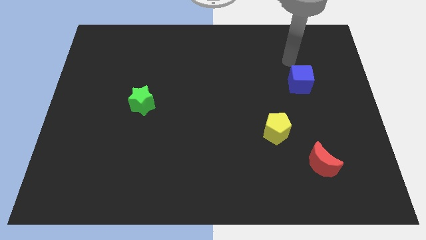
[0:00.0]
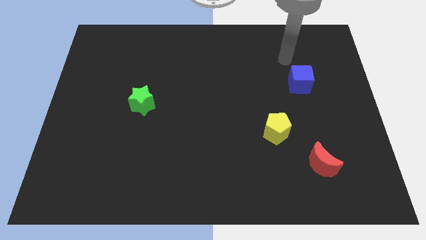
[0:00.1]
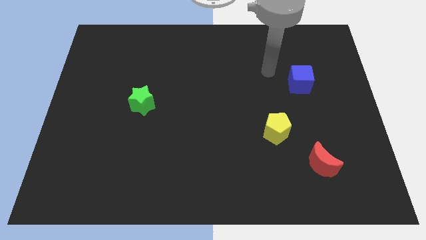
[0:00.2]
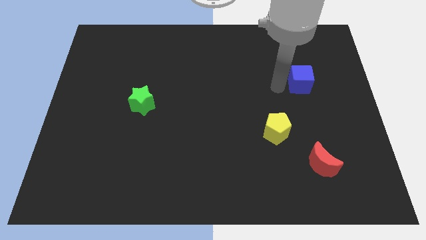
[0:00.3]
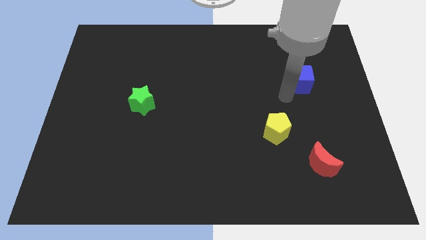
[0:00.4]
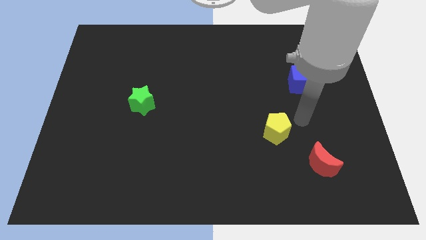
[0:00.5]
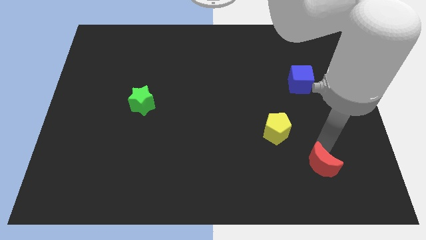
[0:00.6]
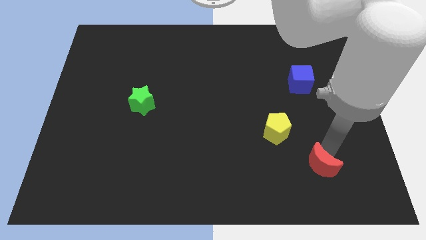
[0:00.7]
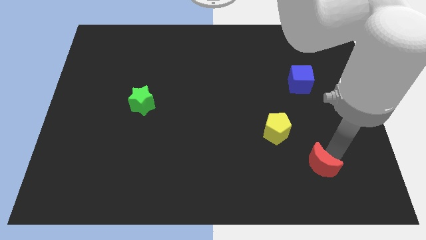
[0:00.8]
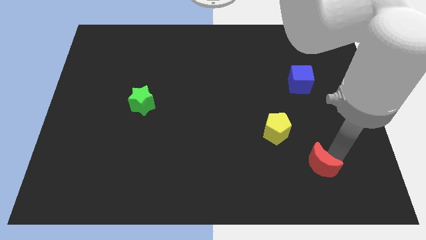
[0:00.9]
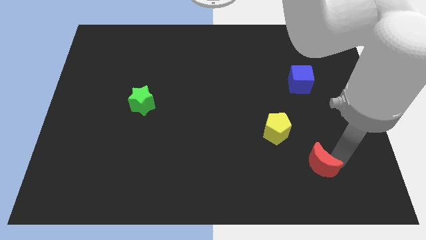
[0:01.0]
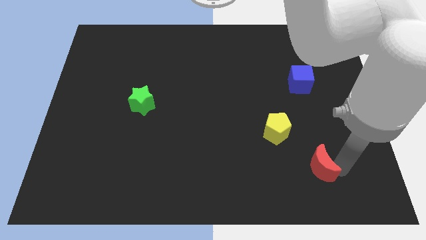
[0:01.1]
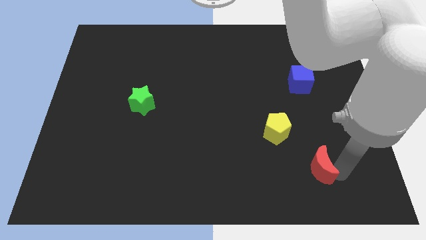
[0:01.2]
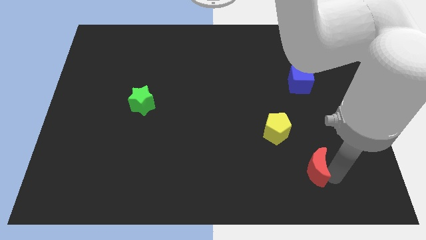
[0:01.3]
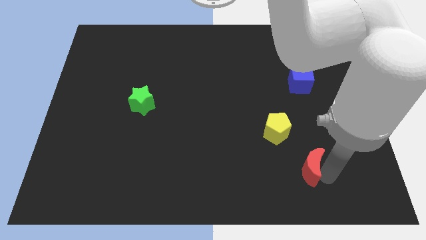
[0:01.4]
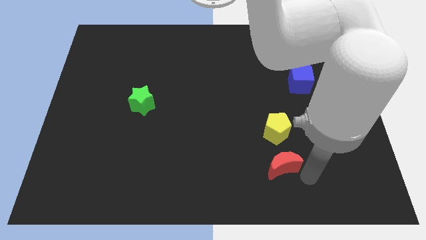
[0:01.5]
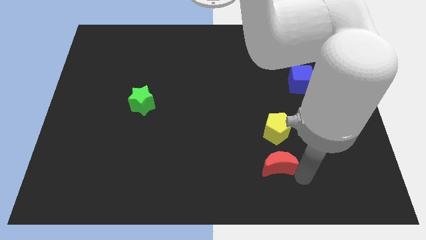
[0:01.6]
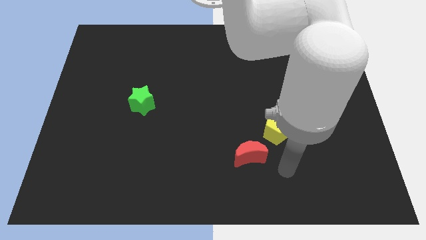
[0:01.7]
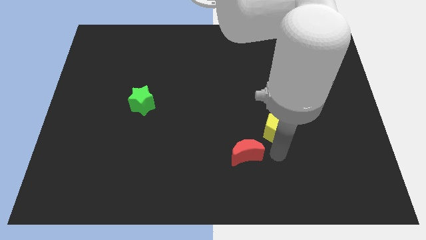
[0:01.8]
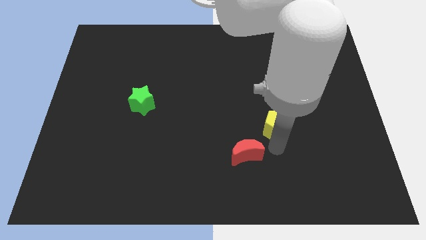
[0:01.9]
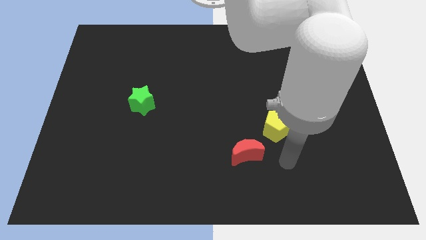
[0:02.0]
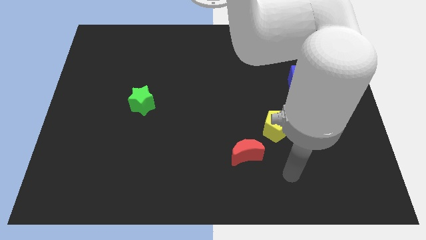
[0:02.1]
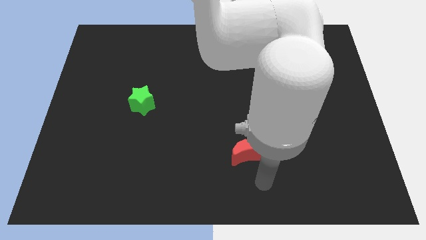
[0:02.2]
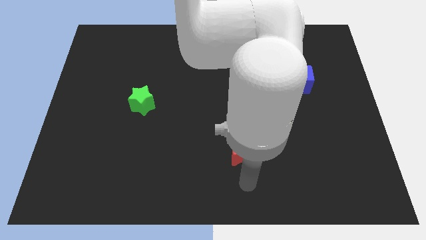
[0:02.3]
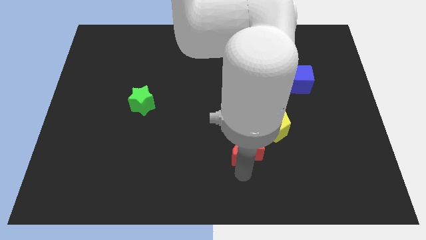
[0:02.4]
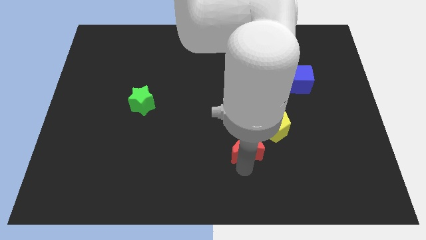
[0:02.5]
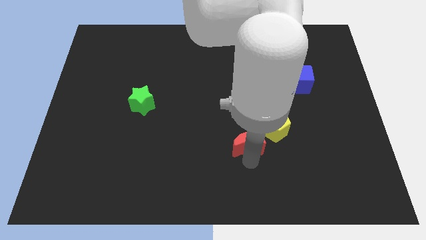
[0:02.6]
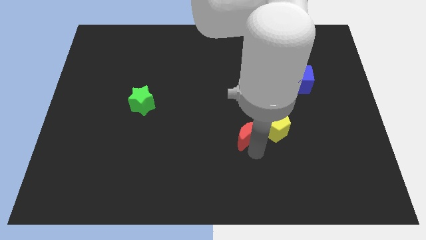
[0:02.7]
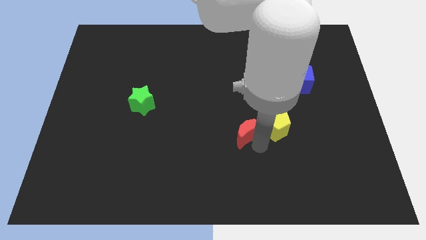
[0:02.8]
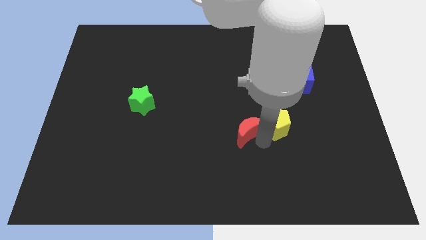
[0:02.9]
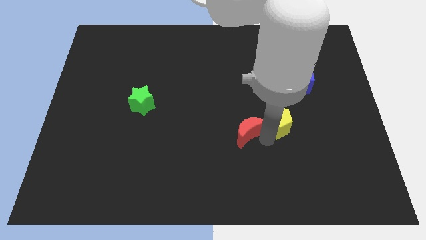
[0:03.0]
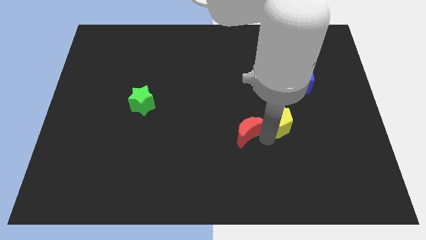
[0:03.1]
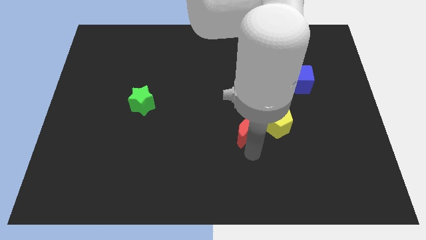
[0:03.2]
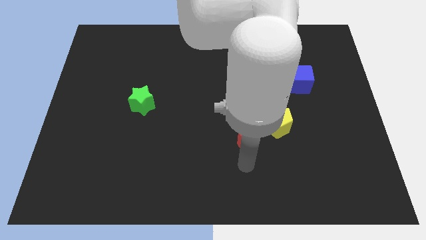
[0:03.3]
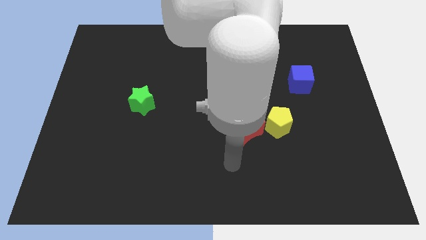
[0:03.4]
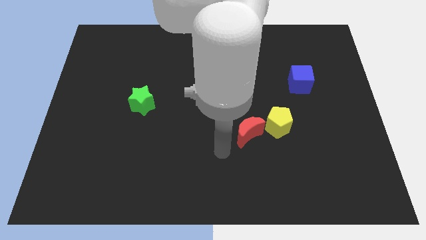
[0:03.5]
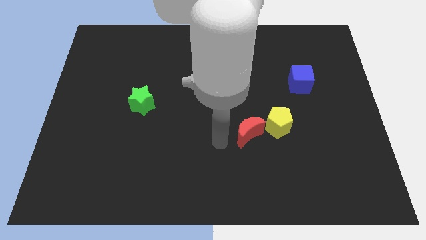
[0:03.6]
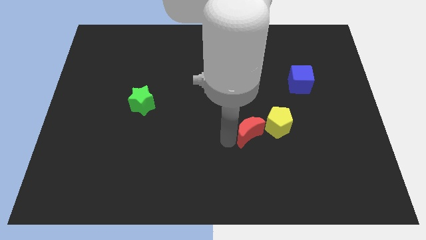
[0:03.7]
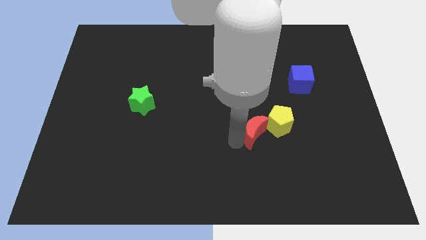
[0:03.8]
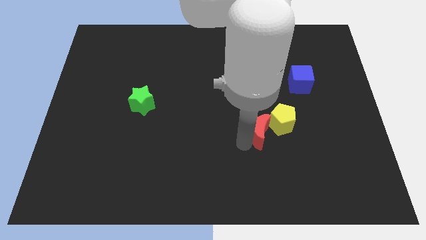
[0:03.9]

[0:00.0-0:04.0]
push the moon towards the yellow pentagon

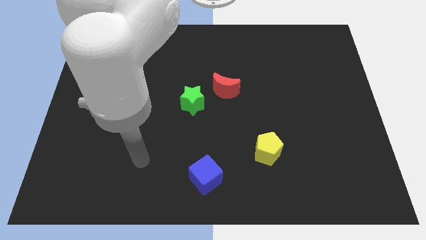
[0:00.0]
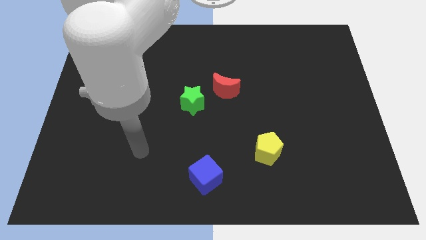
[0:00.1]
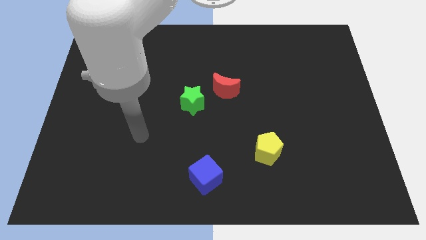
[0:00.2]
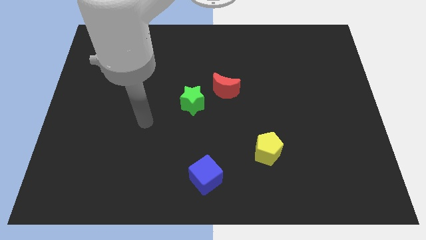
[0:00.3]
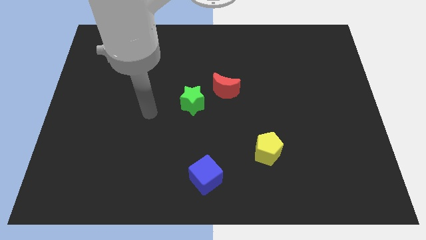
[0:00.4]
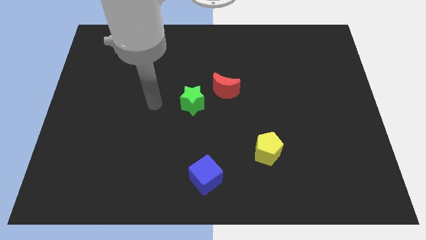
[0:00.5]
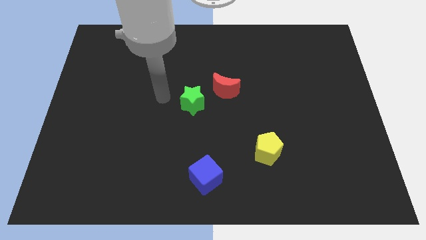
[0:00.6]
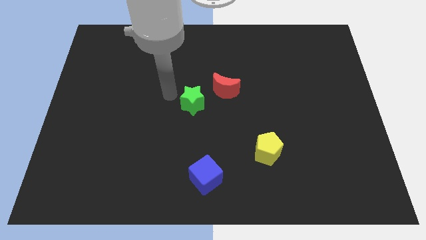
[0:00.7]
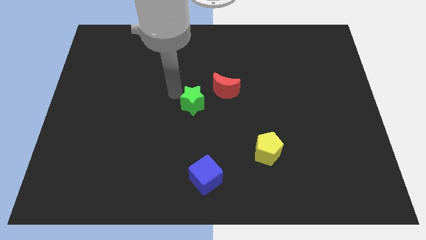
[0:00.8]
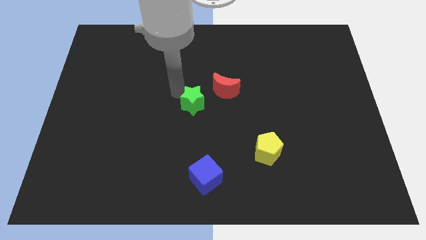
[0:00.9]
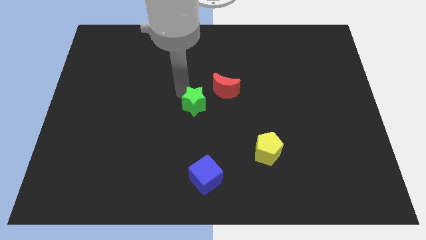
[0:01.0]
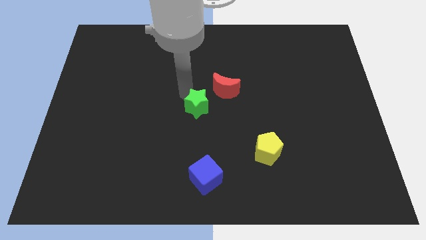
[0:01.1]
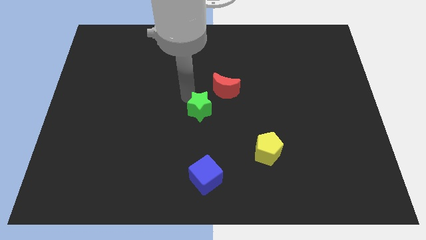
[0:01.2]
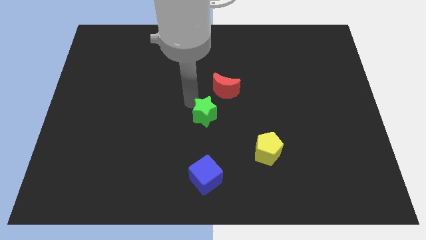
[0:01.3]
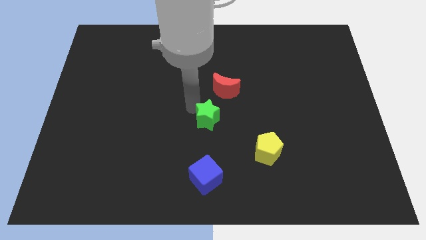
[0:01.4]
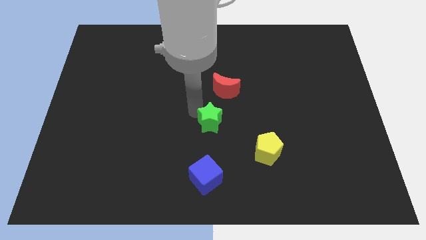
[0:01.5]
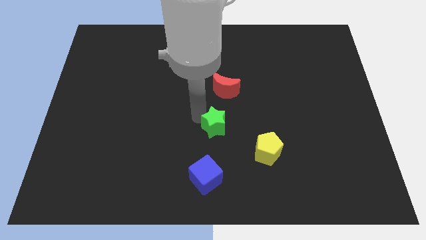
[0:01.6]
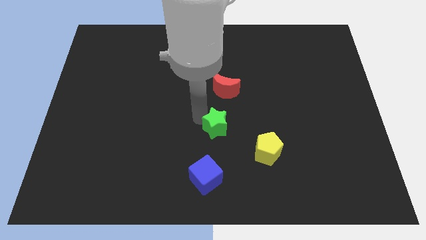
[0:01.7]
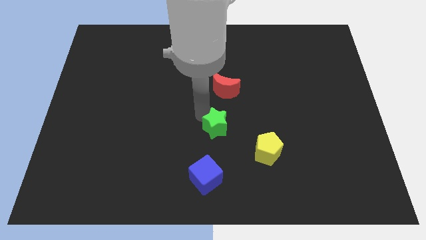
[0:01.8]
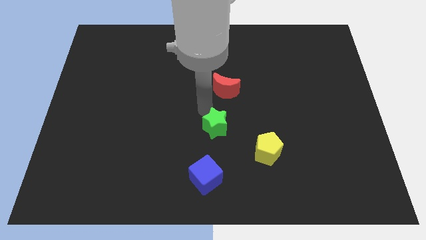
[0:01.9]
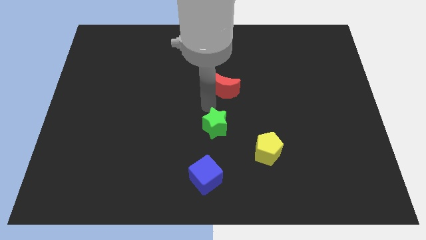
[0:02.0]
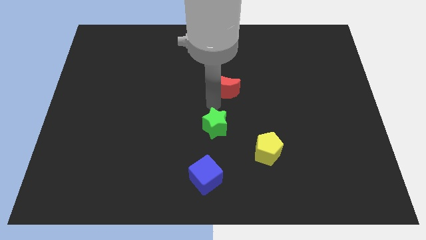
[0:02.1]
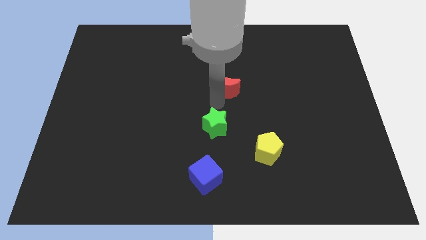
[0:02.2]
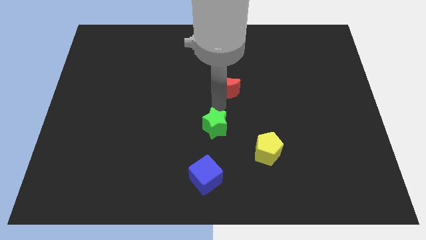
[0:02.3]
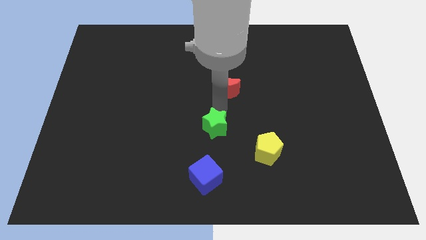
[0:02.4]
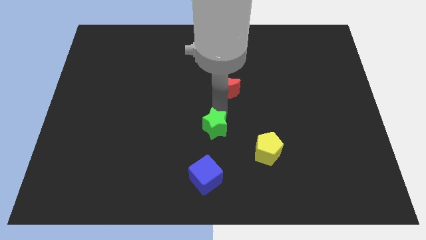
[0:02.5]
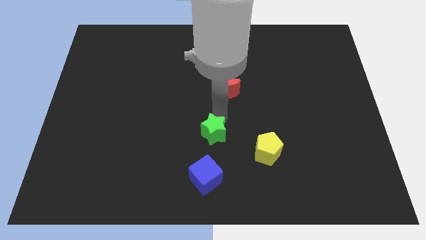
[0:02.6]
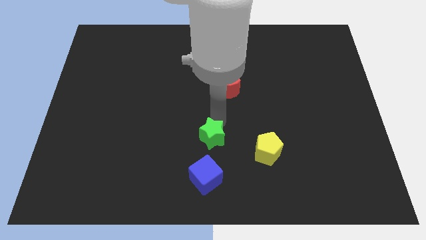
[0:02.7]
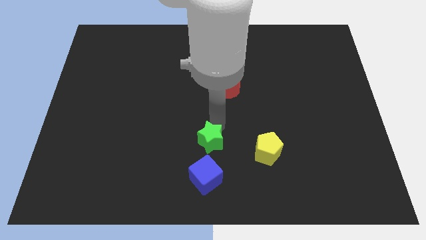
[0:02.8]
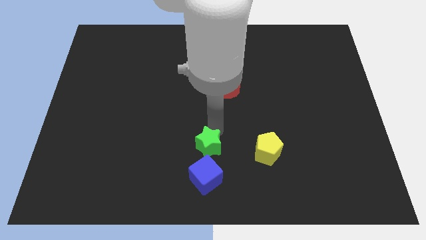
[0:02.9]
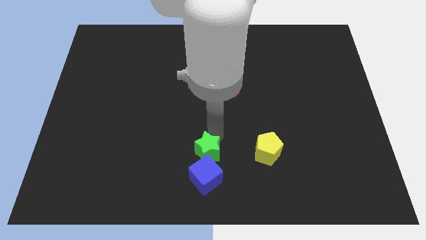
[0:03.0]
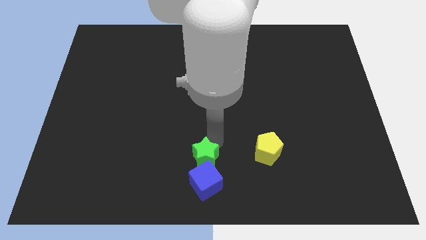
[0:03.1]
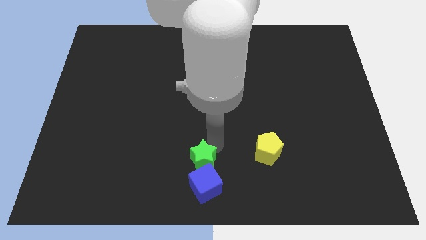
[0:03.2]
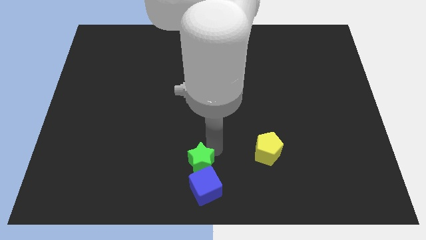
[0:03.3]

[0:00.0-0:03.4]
slide the star to the blue cube

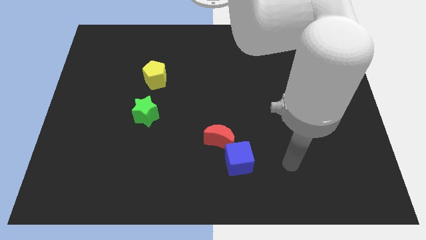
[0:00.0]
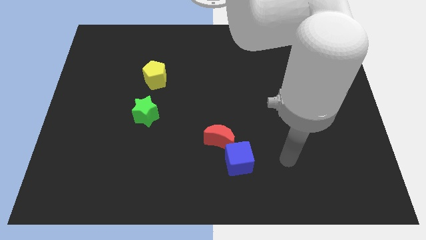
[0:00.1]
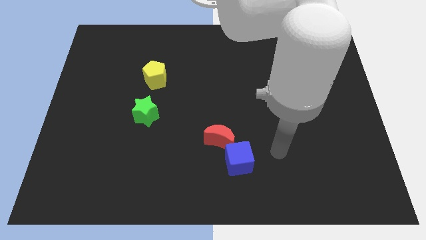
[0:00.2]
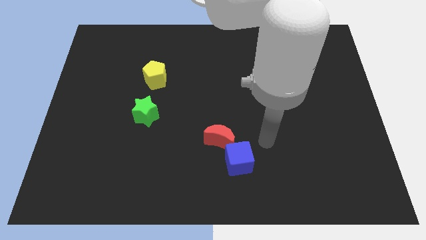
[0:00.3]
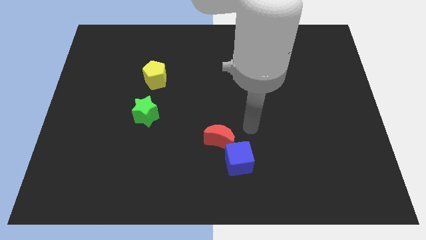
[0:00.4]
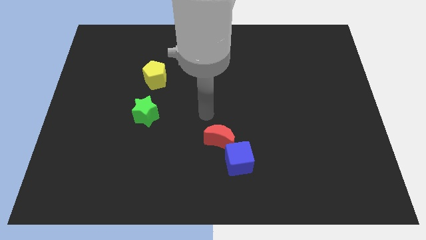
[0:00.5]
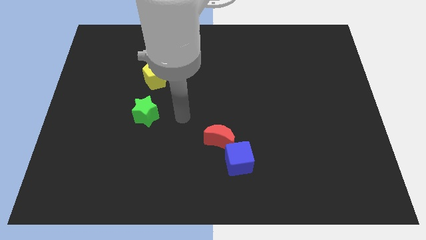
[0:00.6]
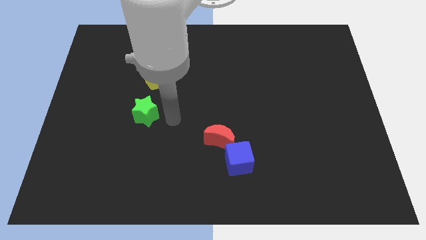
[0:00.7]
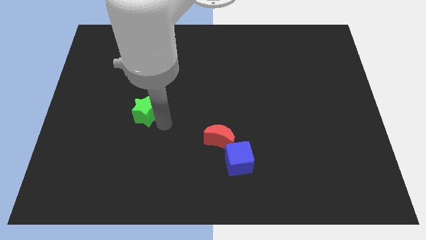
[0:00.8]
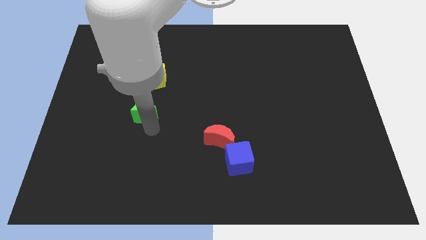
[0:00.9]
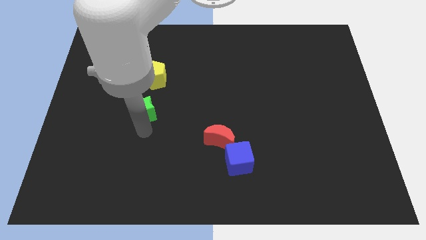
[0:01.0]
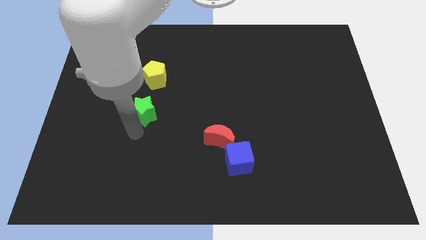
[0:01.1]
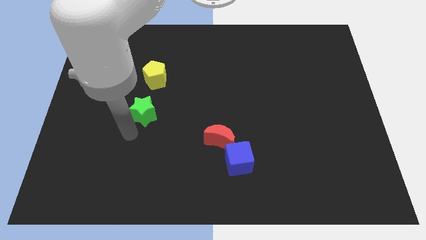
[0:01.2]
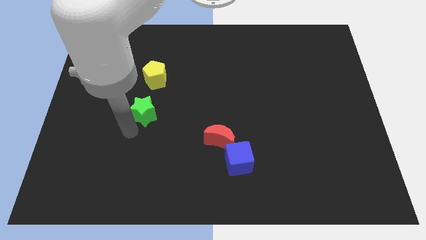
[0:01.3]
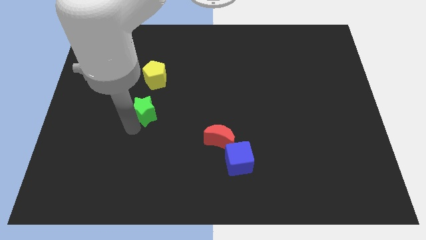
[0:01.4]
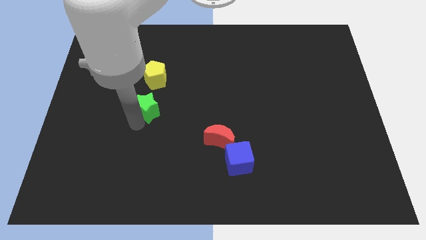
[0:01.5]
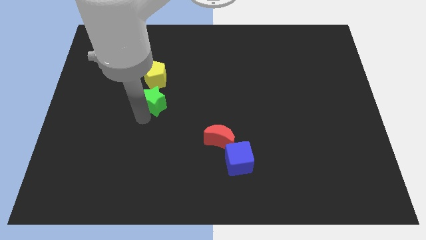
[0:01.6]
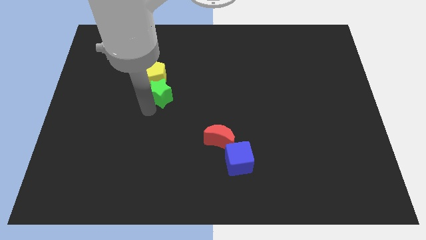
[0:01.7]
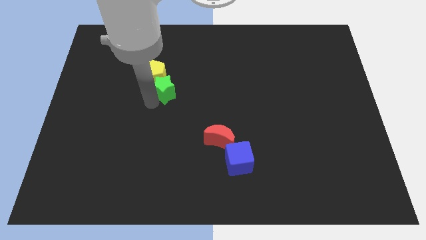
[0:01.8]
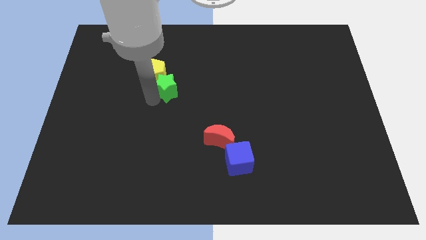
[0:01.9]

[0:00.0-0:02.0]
push the green star towards the yellow block
